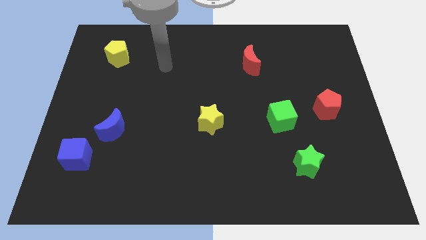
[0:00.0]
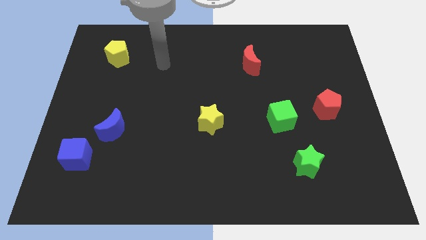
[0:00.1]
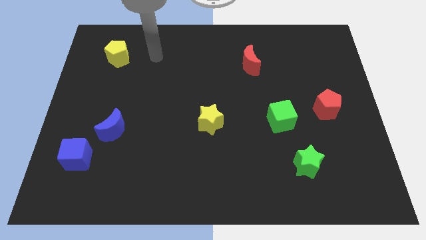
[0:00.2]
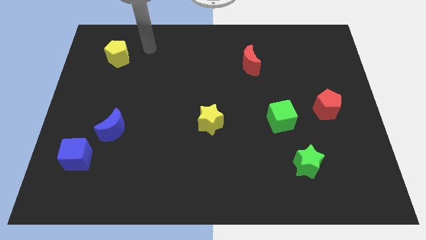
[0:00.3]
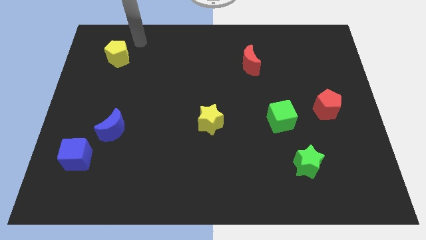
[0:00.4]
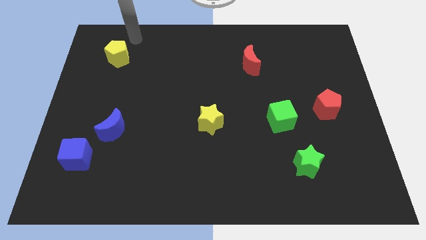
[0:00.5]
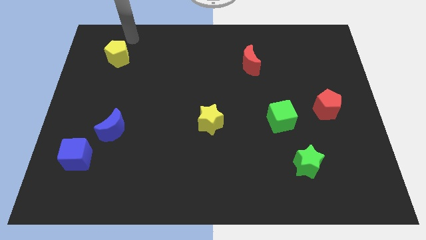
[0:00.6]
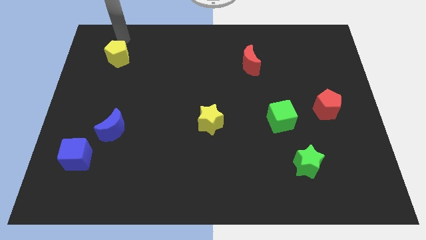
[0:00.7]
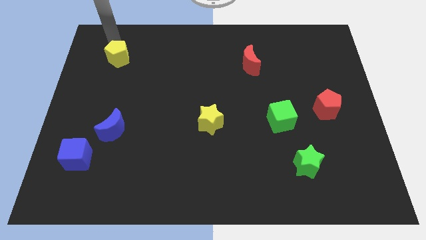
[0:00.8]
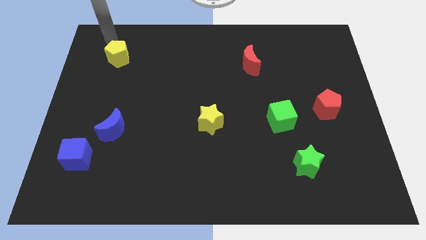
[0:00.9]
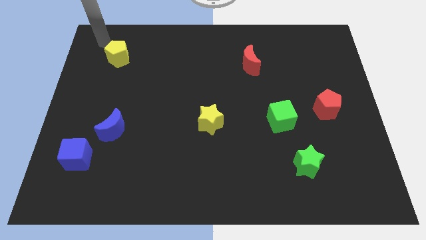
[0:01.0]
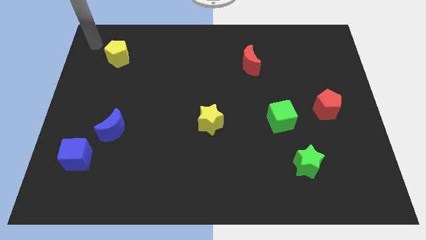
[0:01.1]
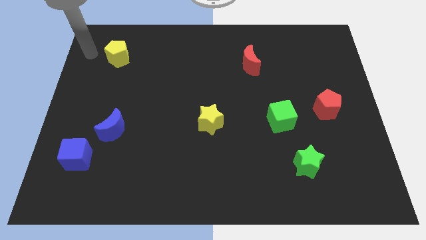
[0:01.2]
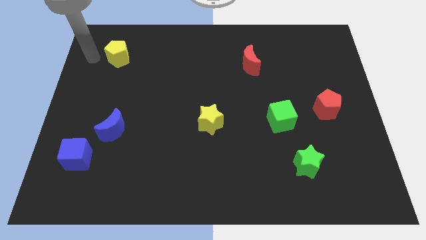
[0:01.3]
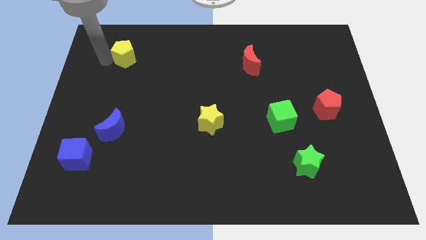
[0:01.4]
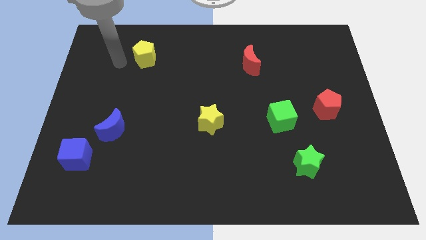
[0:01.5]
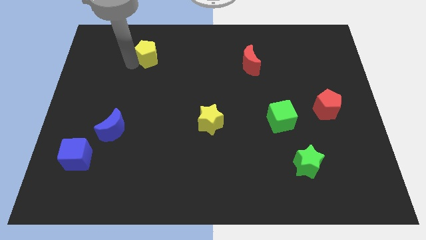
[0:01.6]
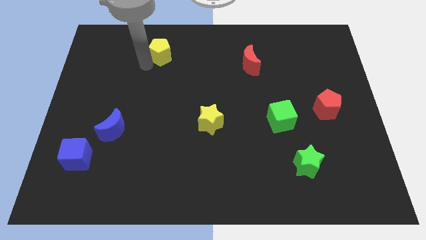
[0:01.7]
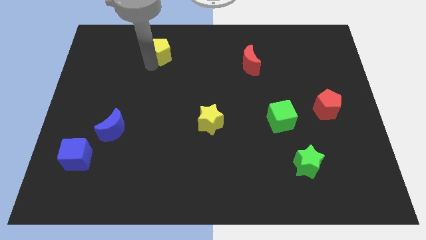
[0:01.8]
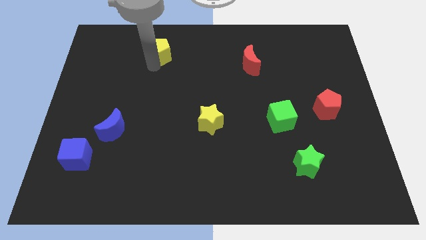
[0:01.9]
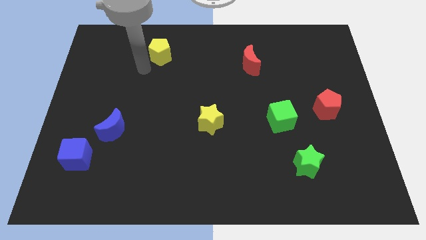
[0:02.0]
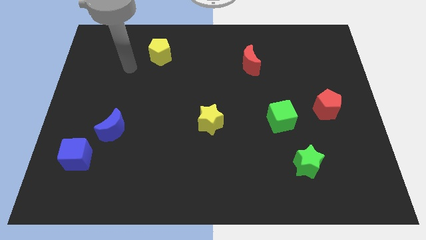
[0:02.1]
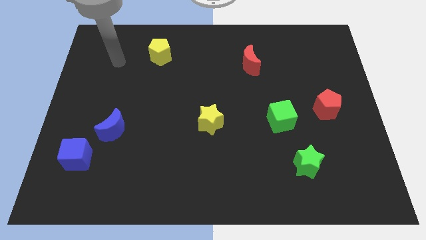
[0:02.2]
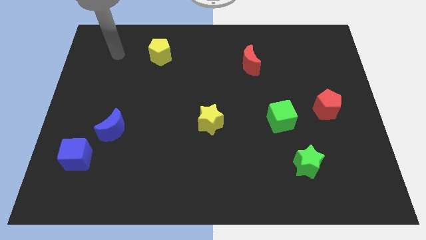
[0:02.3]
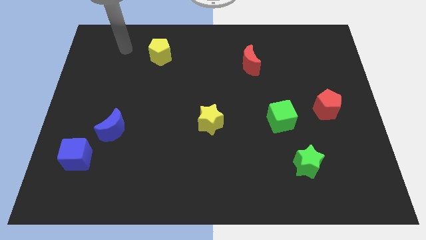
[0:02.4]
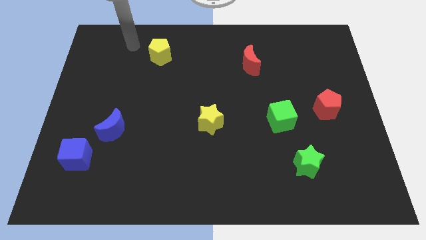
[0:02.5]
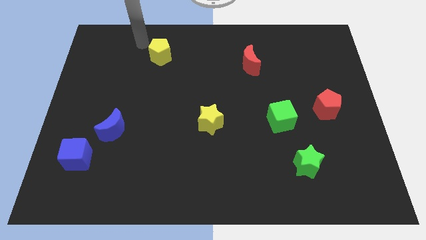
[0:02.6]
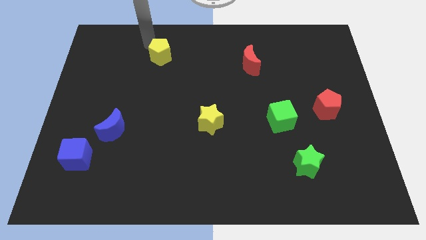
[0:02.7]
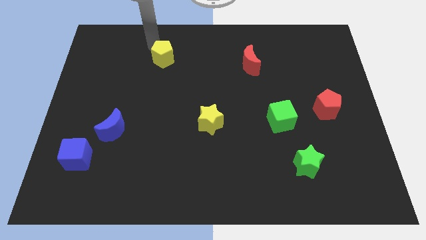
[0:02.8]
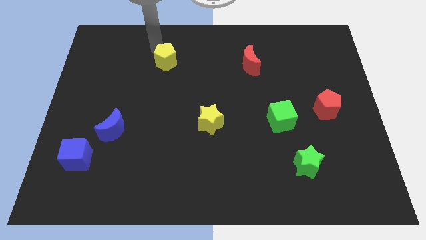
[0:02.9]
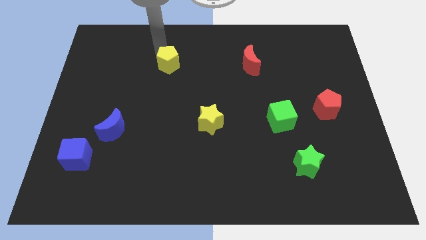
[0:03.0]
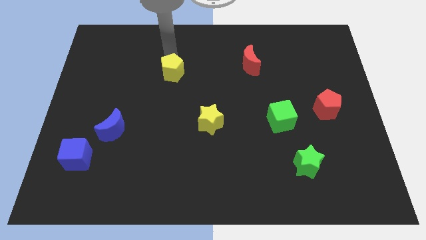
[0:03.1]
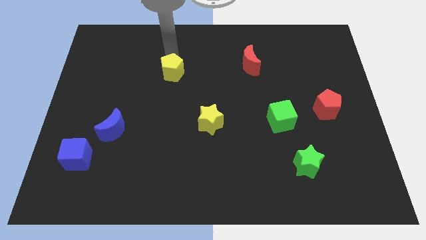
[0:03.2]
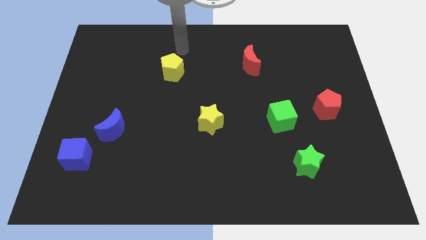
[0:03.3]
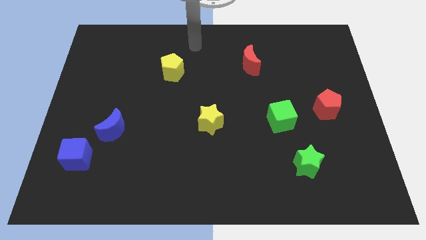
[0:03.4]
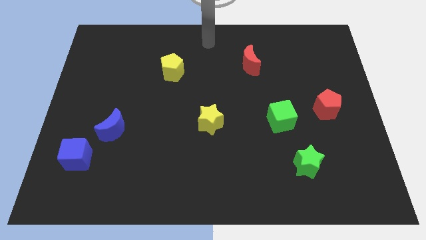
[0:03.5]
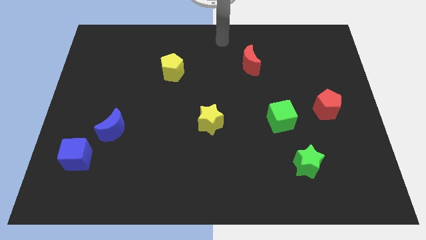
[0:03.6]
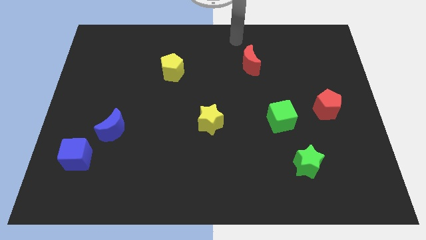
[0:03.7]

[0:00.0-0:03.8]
move the yellow pentagon horizontally to the left side of the red crescent

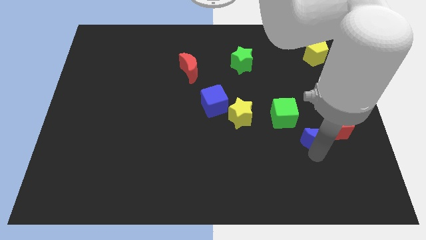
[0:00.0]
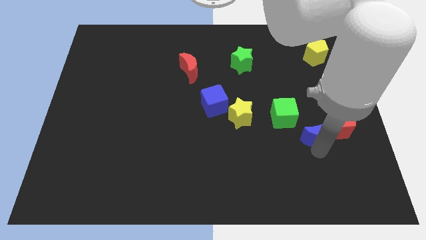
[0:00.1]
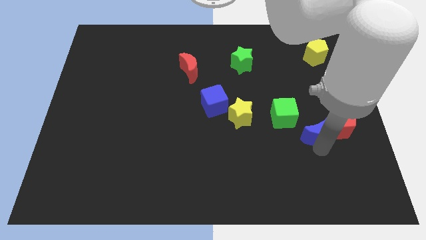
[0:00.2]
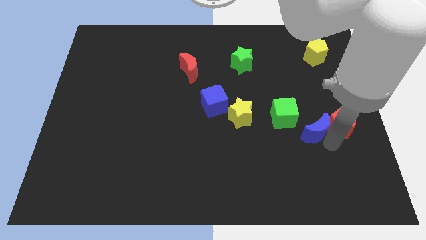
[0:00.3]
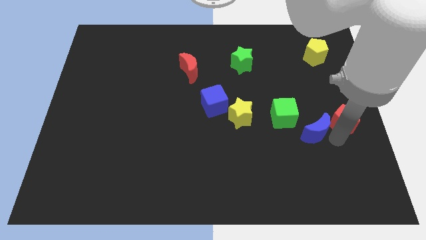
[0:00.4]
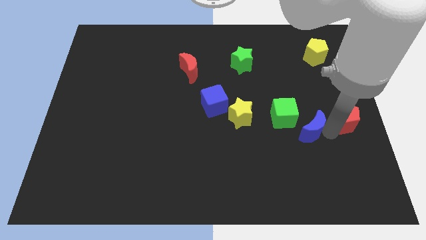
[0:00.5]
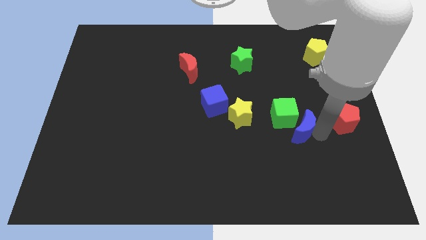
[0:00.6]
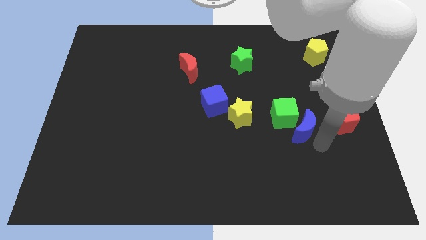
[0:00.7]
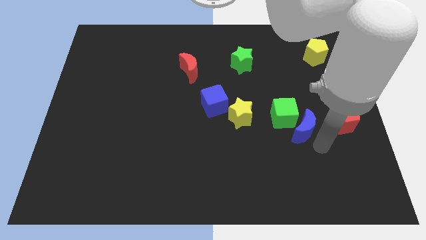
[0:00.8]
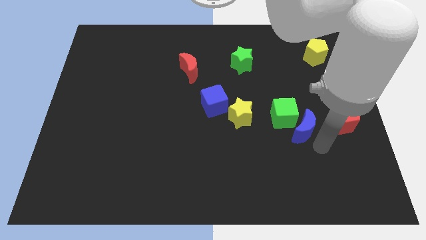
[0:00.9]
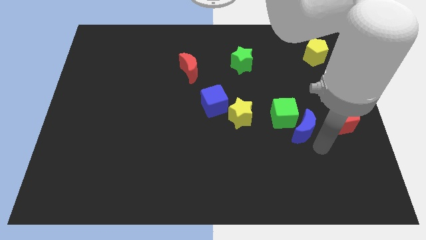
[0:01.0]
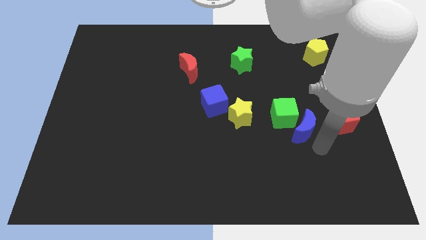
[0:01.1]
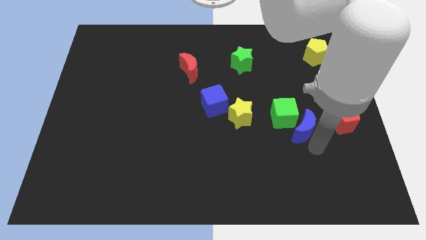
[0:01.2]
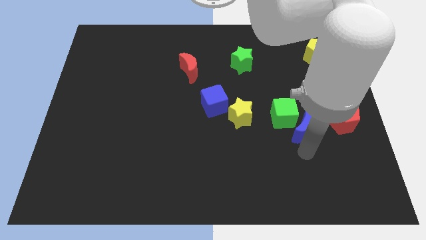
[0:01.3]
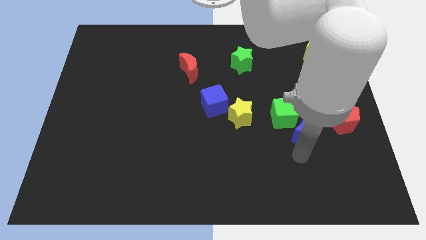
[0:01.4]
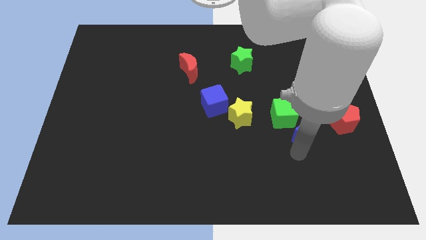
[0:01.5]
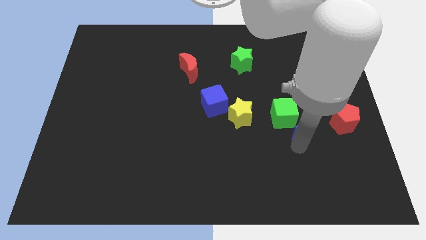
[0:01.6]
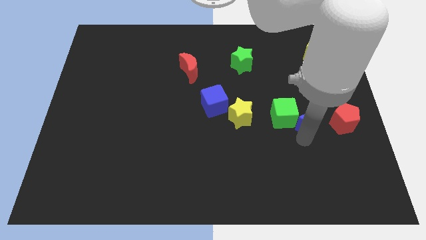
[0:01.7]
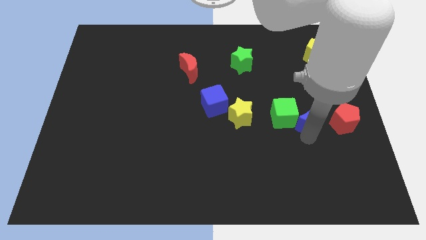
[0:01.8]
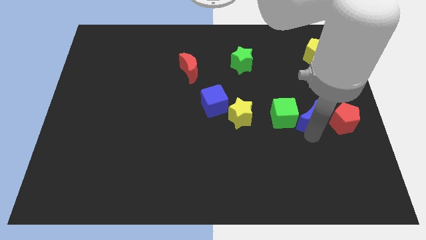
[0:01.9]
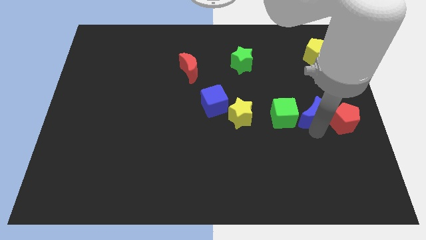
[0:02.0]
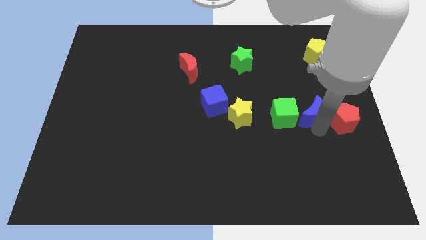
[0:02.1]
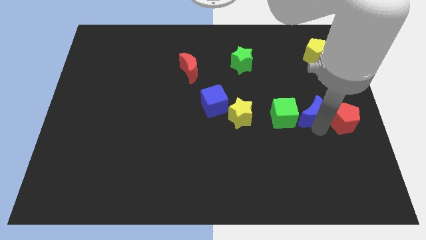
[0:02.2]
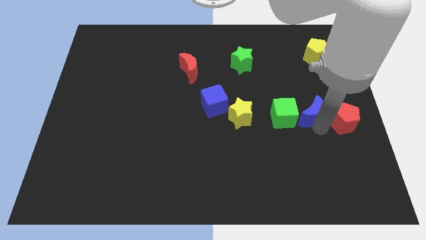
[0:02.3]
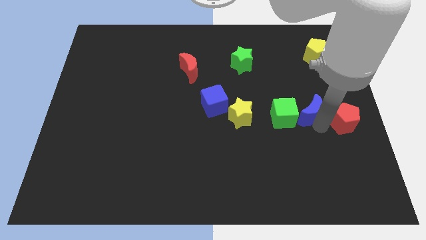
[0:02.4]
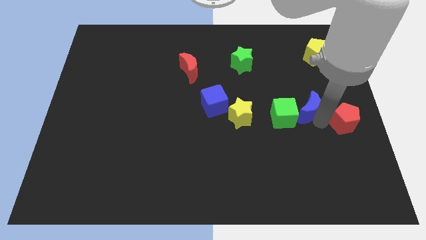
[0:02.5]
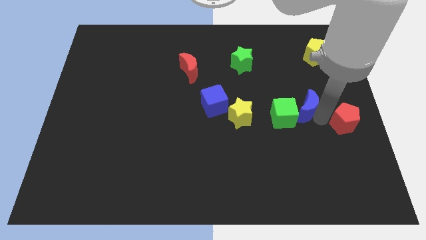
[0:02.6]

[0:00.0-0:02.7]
separate the blue moon and red pentagon

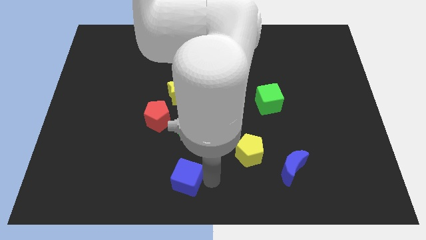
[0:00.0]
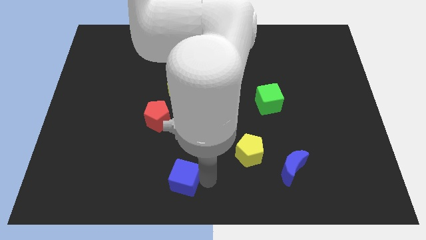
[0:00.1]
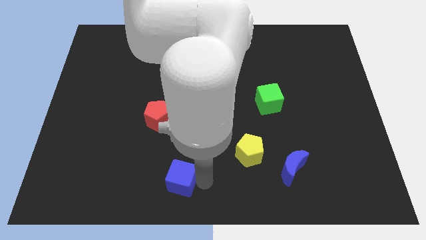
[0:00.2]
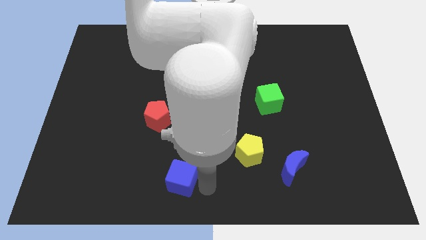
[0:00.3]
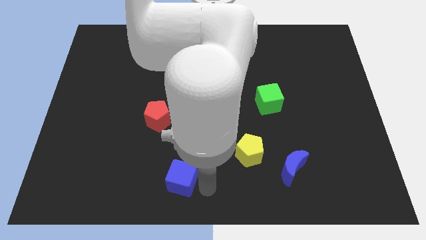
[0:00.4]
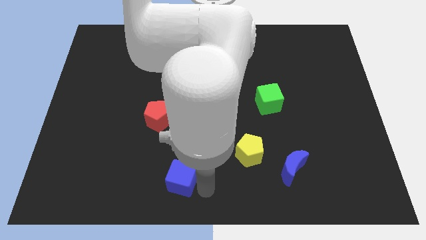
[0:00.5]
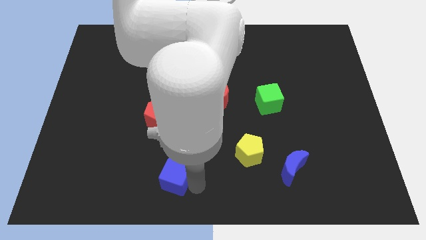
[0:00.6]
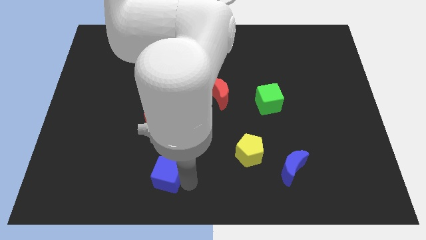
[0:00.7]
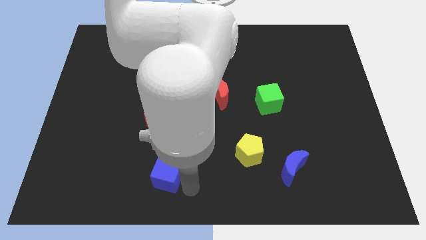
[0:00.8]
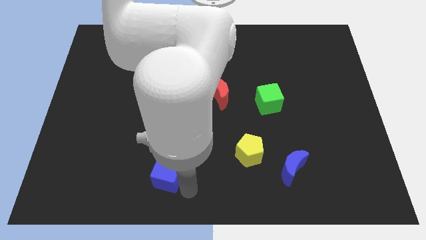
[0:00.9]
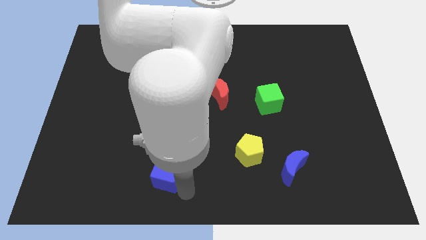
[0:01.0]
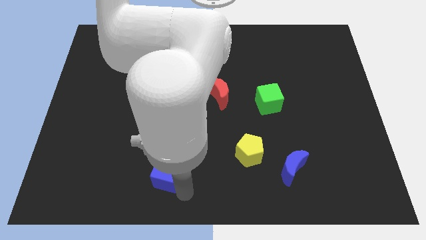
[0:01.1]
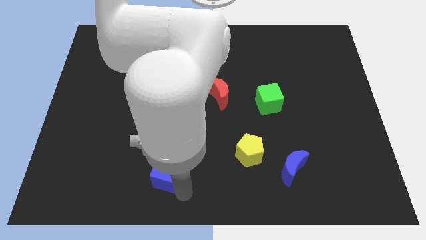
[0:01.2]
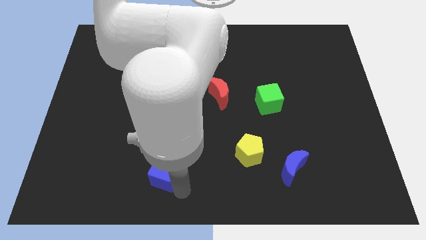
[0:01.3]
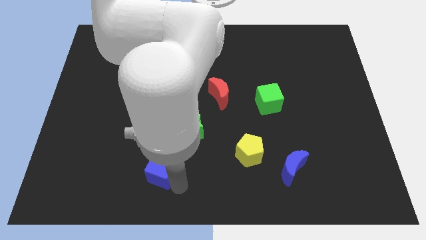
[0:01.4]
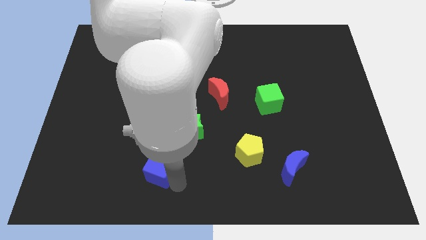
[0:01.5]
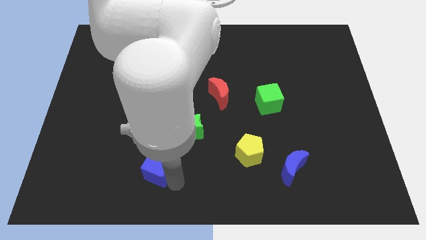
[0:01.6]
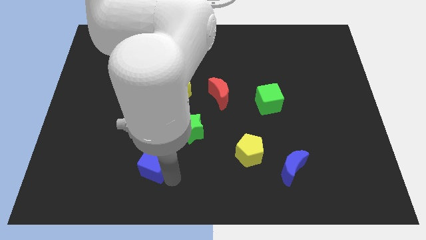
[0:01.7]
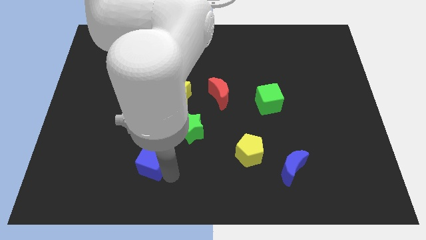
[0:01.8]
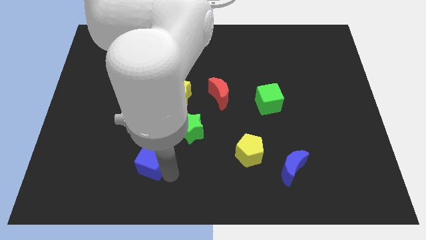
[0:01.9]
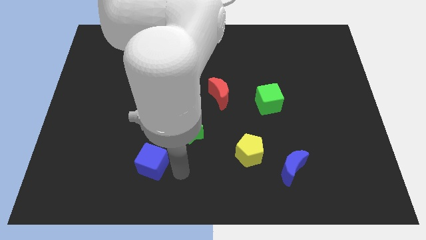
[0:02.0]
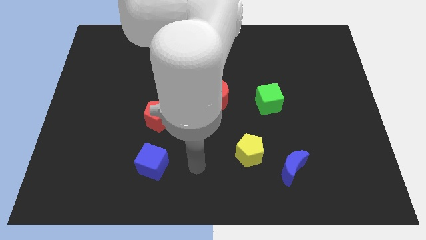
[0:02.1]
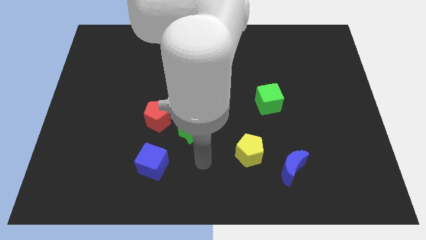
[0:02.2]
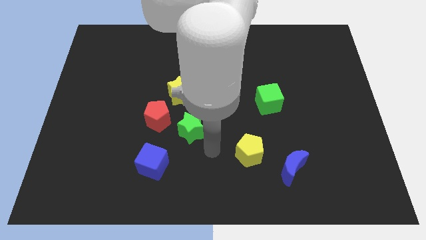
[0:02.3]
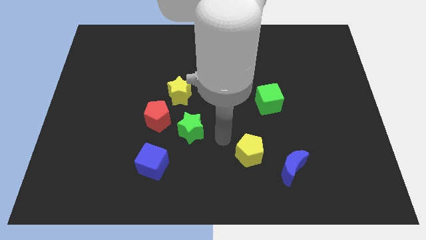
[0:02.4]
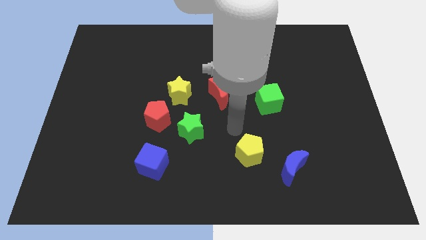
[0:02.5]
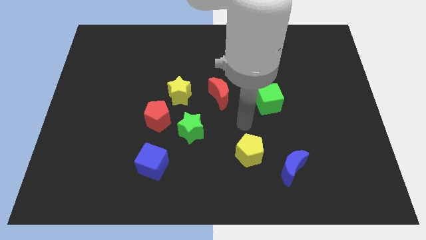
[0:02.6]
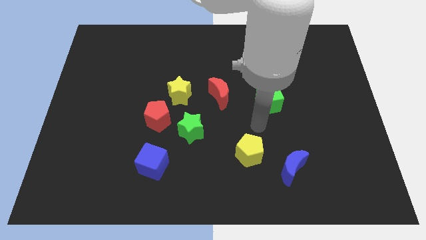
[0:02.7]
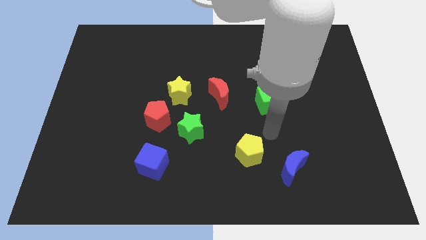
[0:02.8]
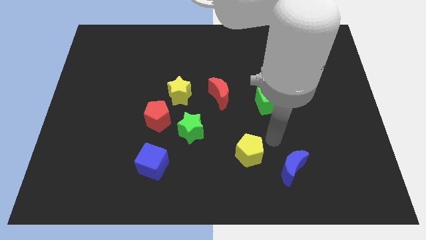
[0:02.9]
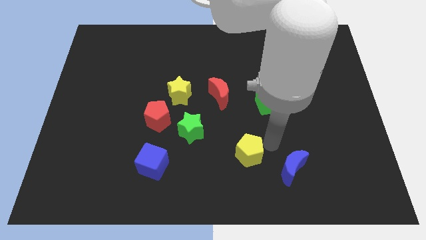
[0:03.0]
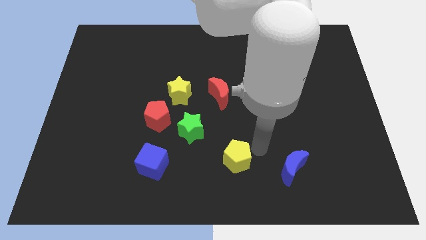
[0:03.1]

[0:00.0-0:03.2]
place the blue cube vertically below the red pentagon
